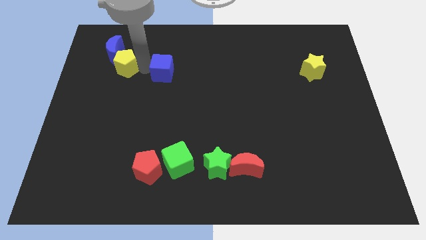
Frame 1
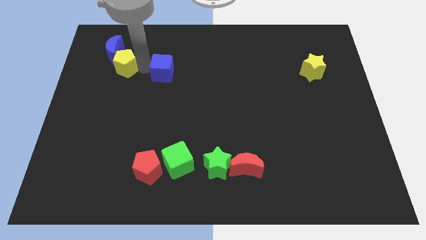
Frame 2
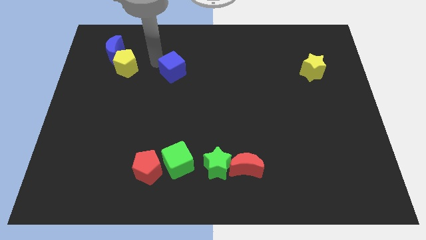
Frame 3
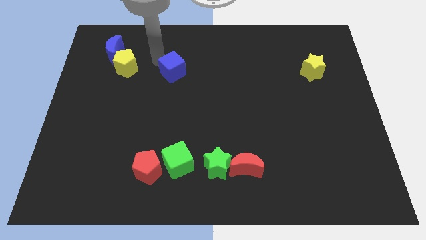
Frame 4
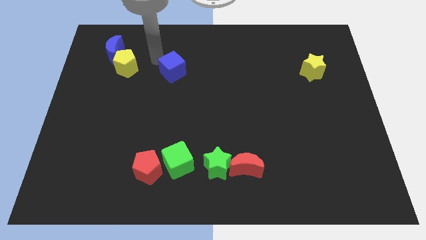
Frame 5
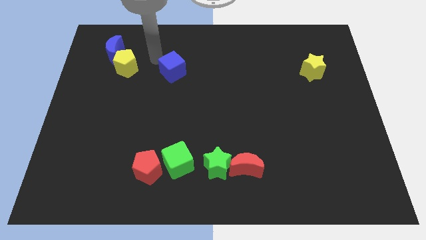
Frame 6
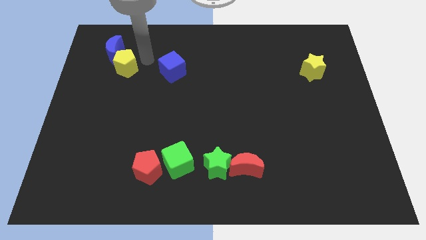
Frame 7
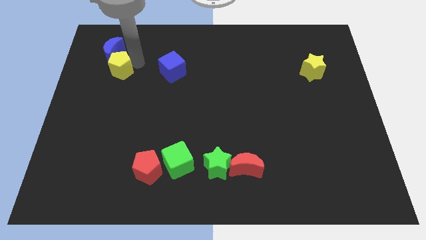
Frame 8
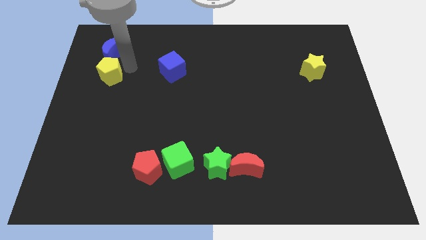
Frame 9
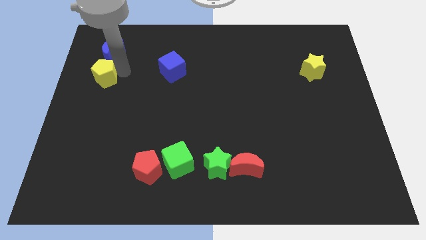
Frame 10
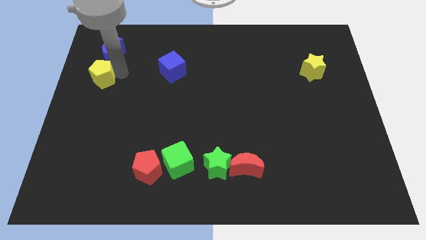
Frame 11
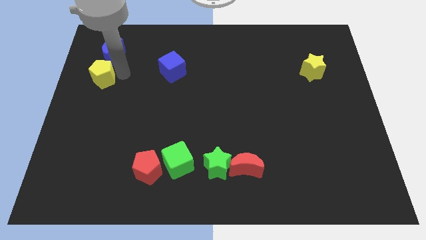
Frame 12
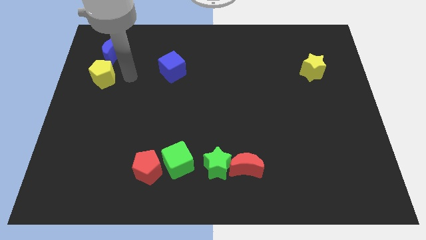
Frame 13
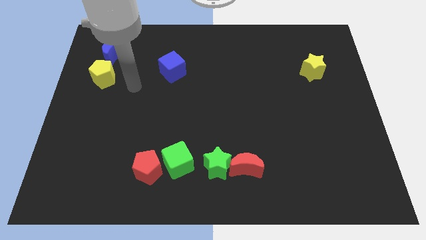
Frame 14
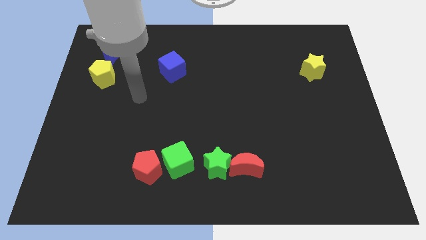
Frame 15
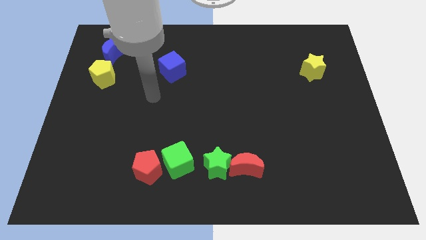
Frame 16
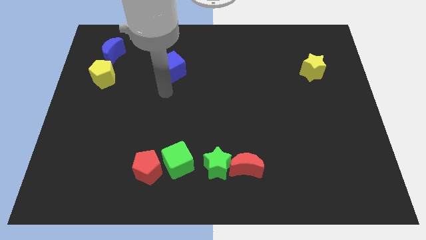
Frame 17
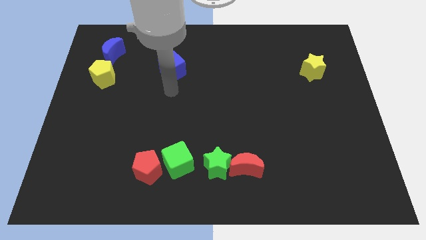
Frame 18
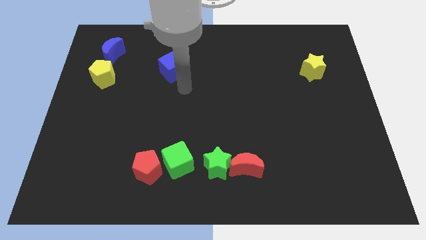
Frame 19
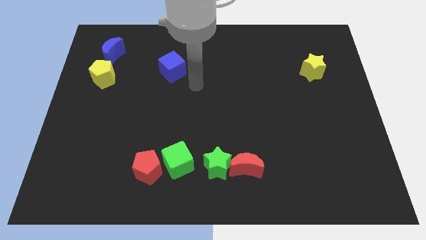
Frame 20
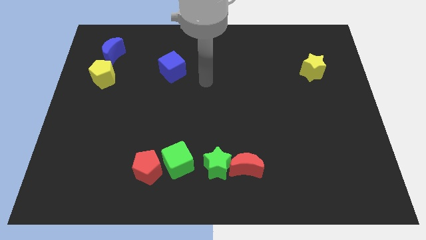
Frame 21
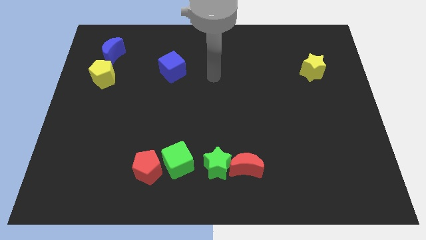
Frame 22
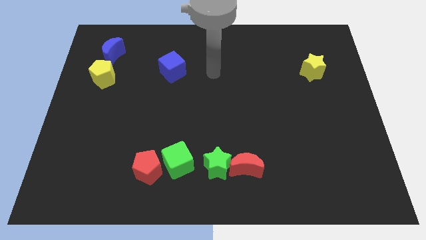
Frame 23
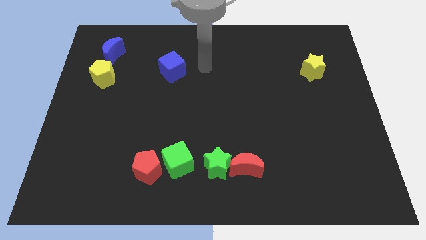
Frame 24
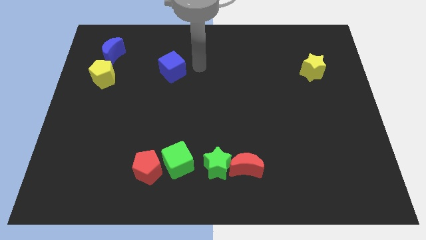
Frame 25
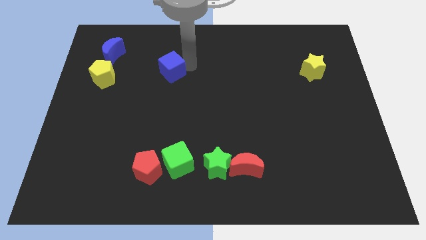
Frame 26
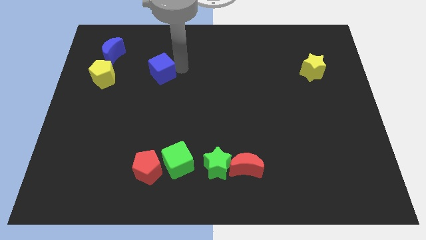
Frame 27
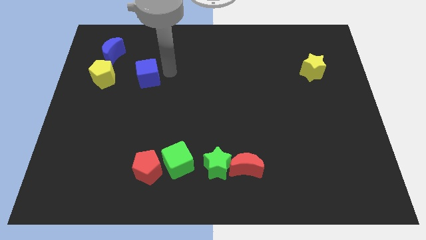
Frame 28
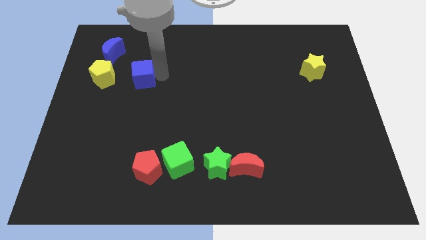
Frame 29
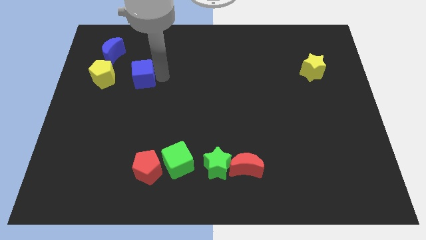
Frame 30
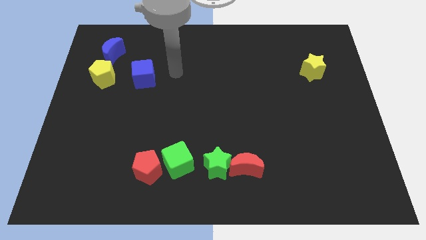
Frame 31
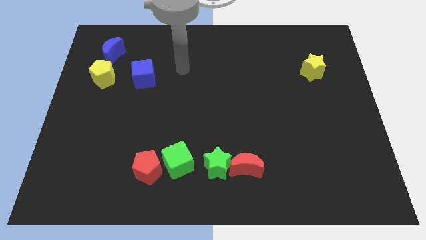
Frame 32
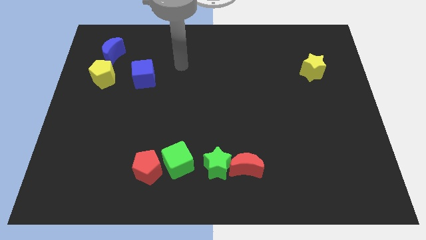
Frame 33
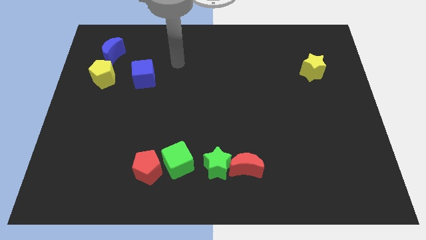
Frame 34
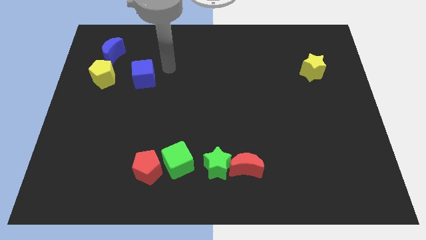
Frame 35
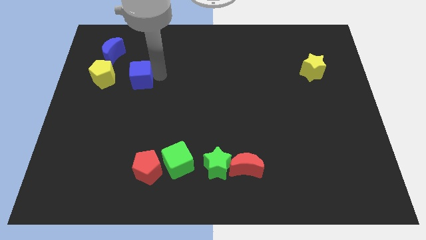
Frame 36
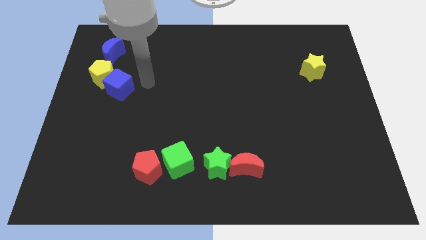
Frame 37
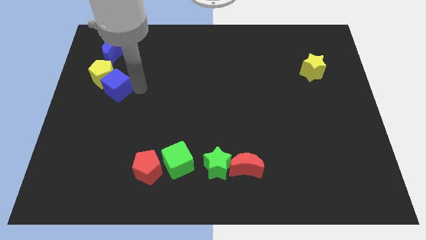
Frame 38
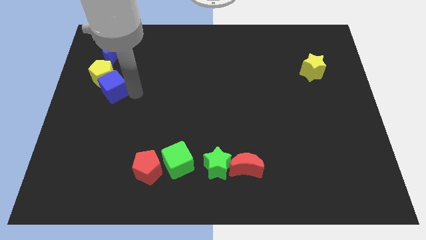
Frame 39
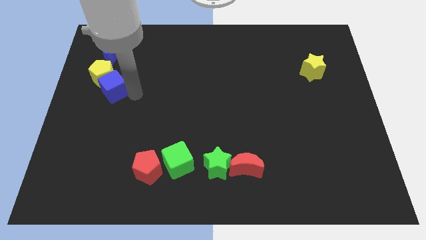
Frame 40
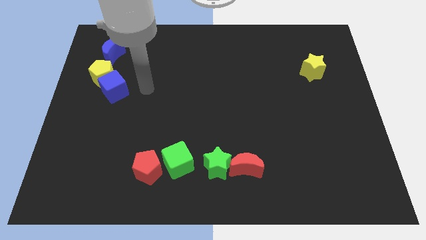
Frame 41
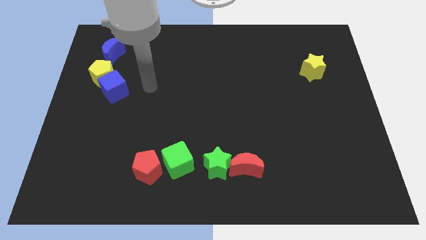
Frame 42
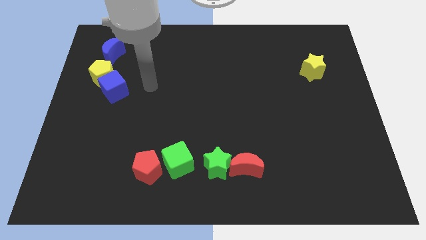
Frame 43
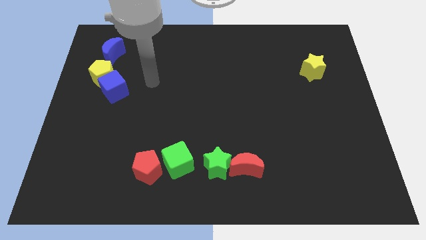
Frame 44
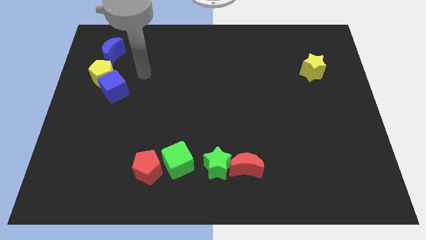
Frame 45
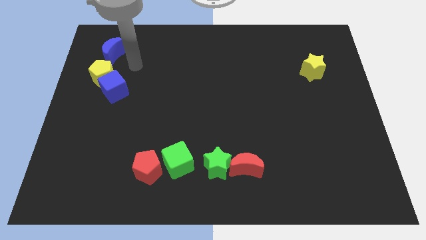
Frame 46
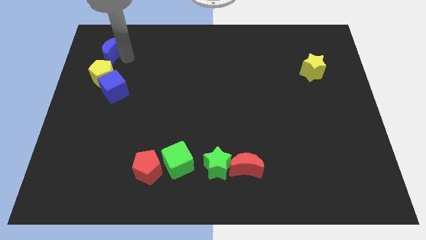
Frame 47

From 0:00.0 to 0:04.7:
place the blue cube to the bottom right to yellow pentagon

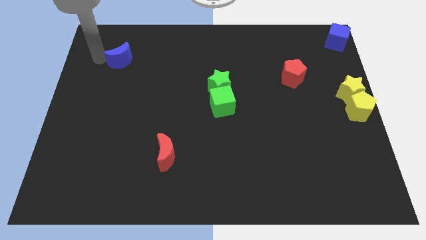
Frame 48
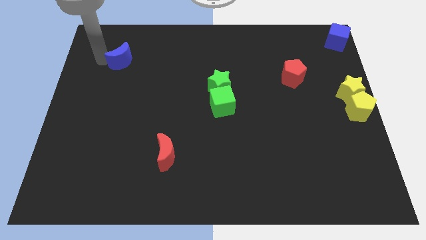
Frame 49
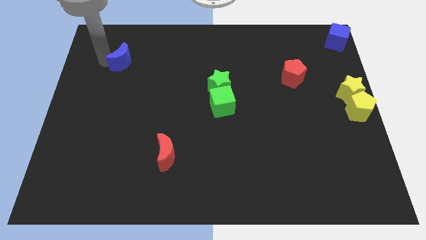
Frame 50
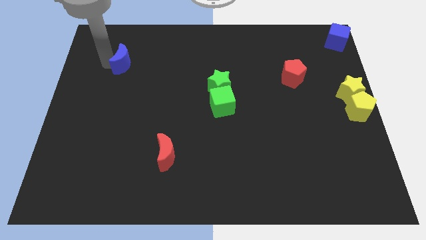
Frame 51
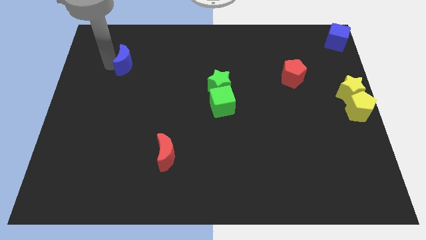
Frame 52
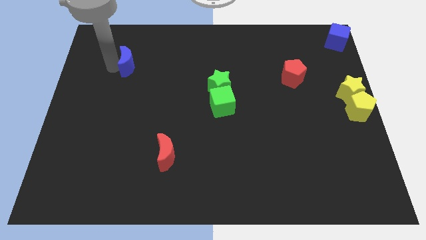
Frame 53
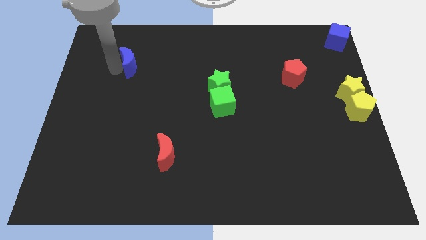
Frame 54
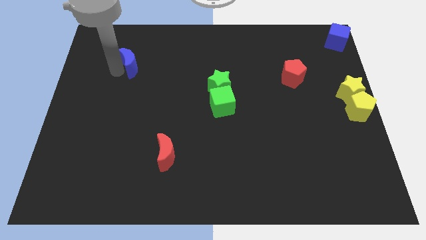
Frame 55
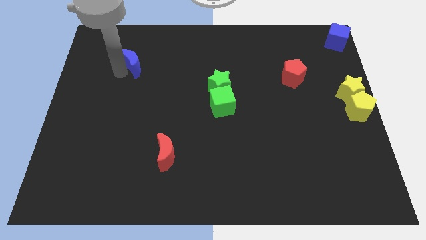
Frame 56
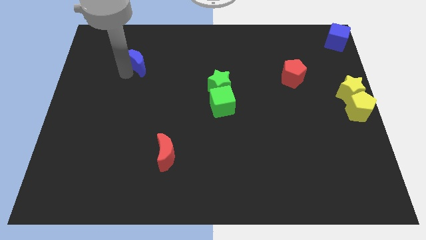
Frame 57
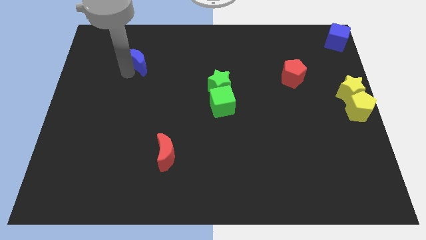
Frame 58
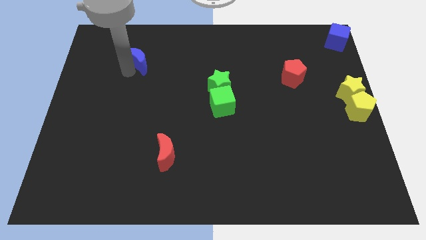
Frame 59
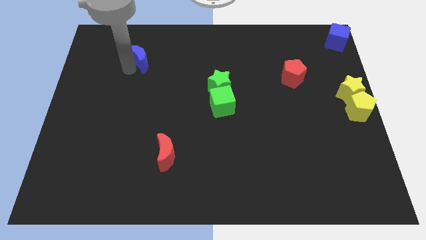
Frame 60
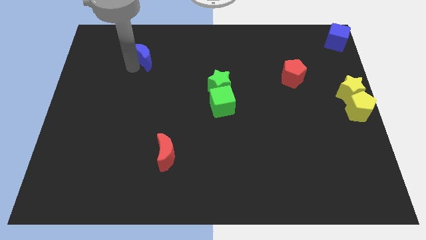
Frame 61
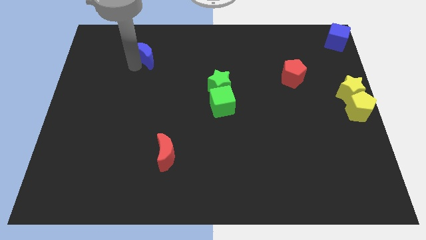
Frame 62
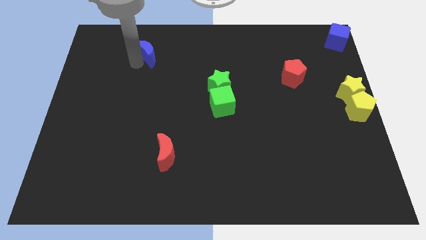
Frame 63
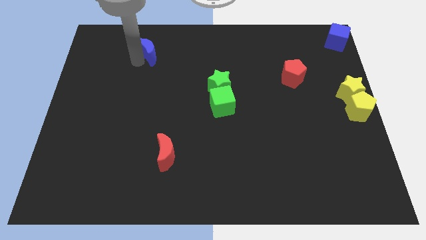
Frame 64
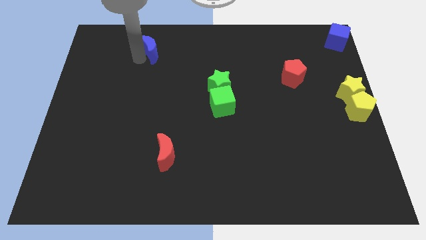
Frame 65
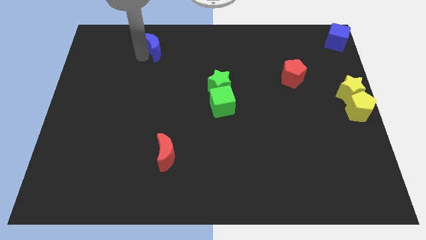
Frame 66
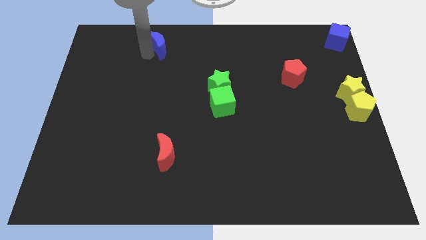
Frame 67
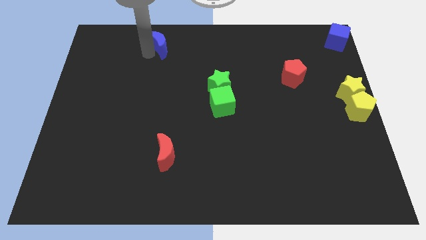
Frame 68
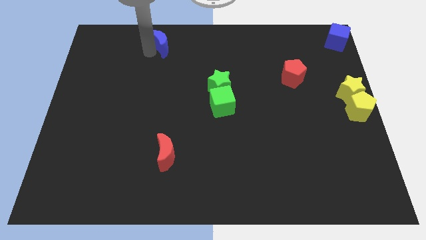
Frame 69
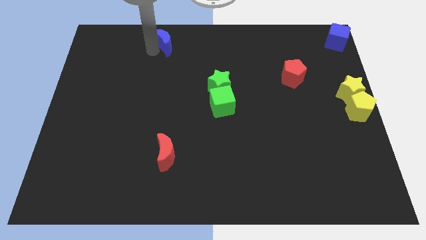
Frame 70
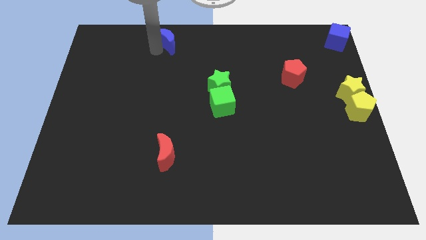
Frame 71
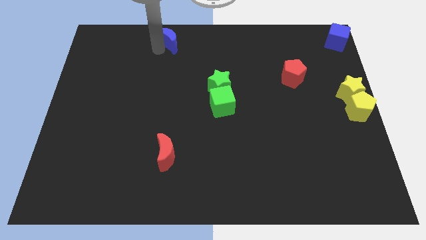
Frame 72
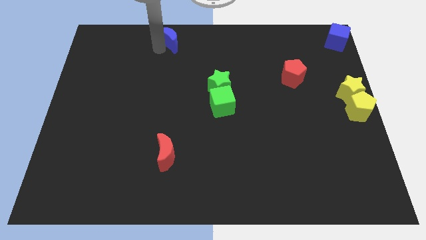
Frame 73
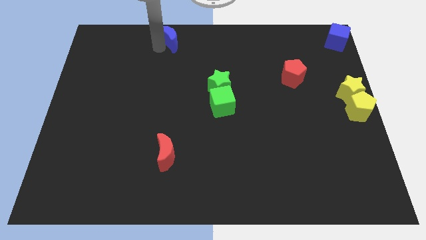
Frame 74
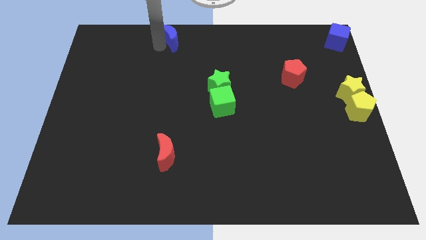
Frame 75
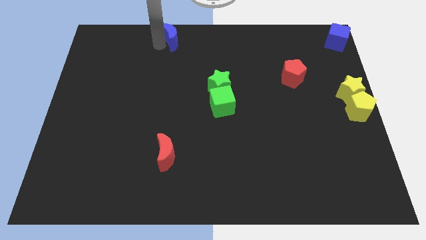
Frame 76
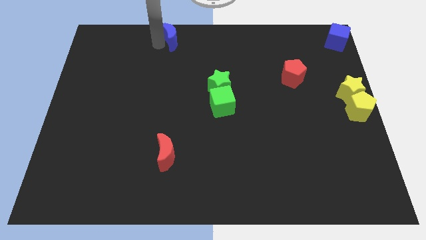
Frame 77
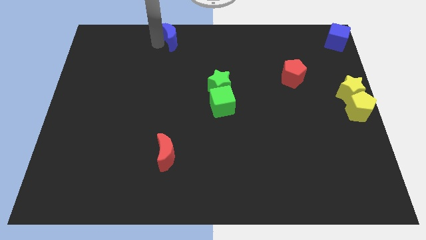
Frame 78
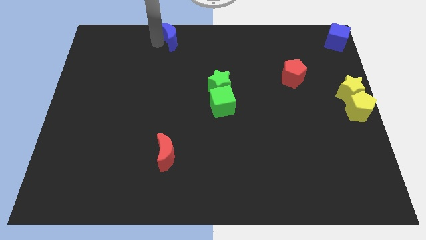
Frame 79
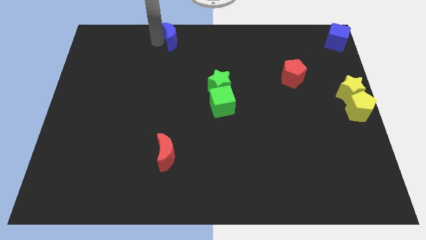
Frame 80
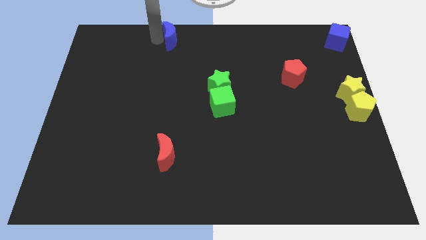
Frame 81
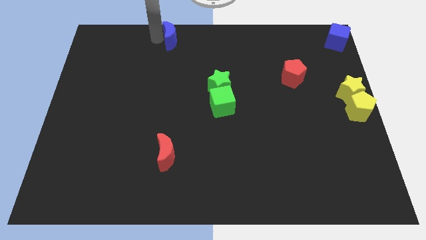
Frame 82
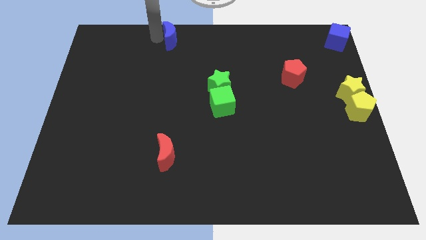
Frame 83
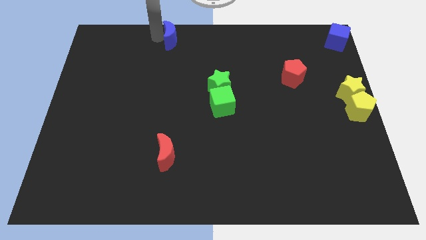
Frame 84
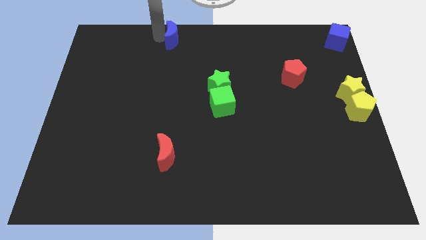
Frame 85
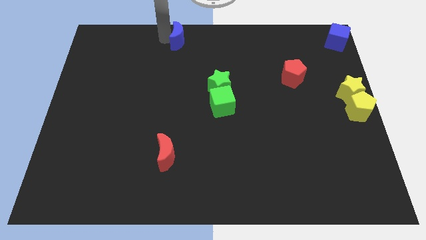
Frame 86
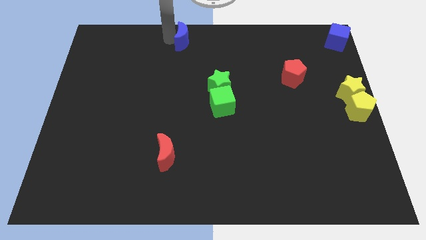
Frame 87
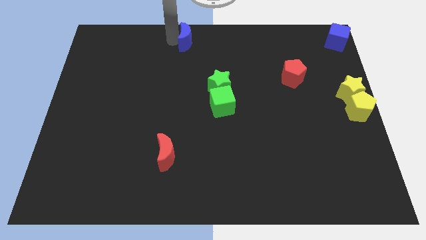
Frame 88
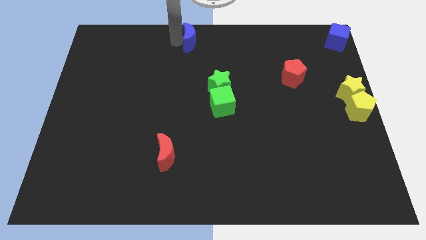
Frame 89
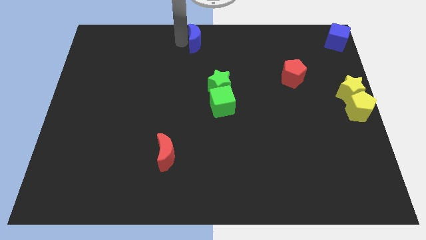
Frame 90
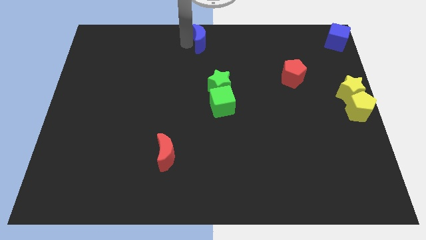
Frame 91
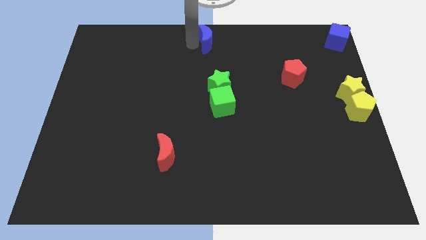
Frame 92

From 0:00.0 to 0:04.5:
place the blue crescent at the top center of the board
